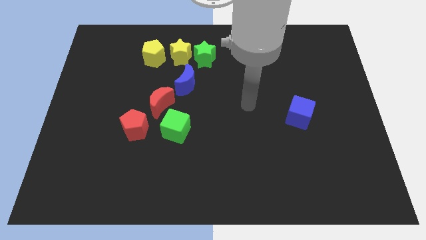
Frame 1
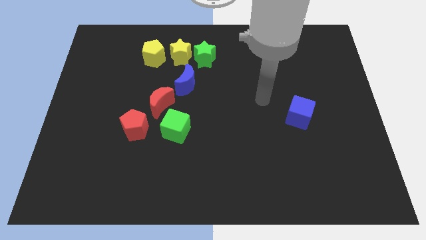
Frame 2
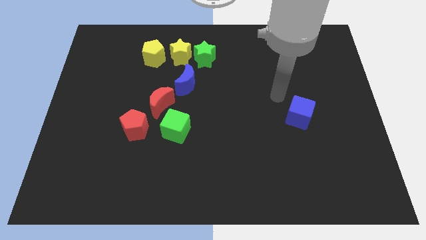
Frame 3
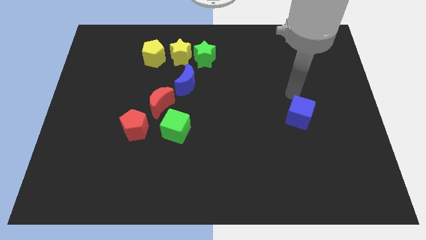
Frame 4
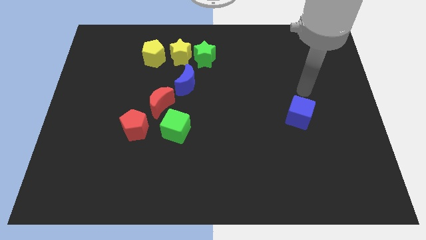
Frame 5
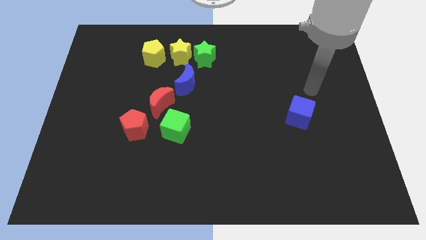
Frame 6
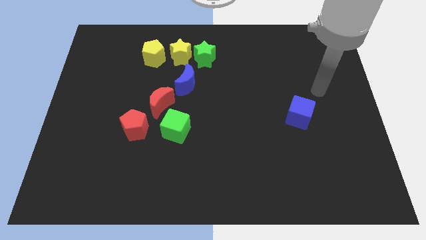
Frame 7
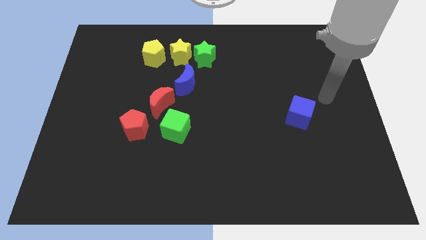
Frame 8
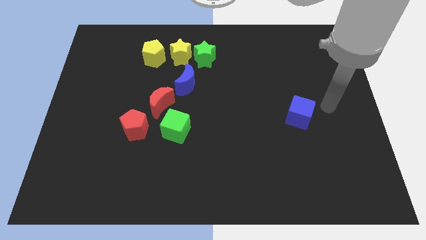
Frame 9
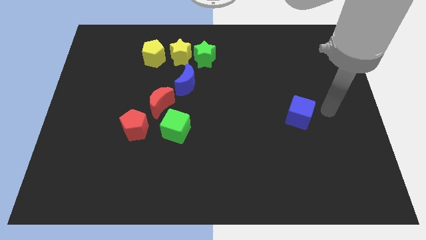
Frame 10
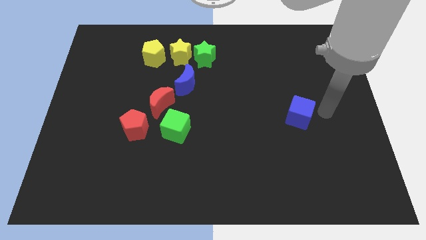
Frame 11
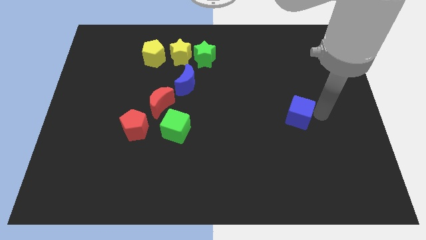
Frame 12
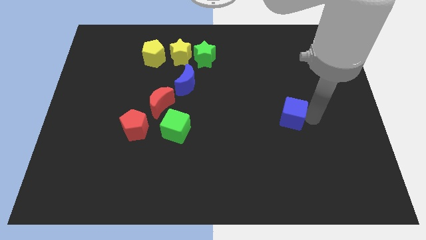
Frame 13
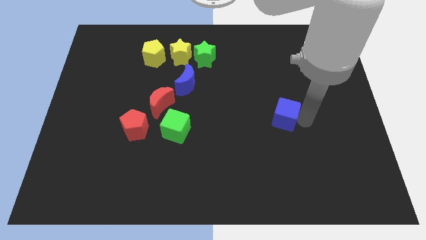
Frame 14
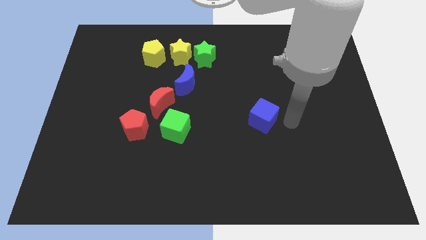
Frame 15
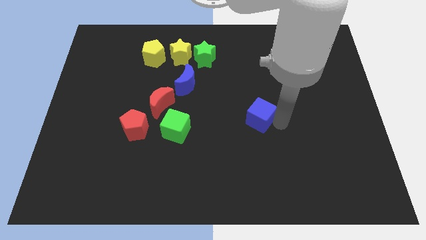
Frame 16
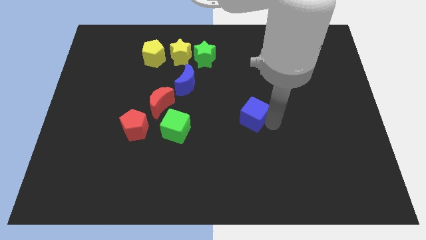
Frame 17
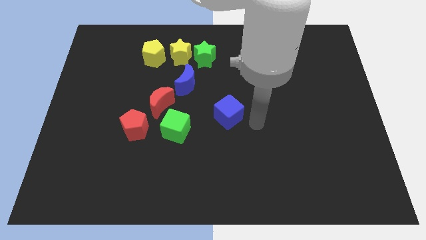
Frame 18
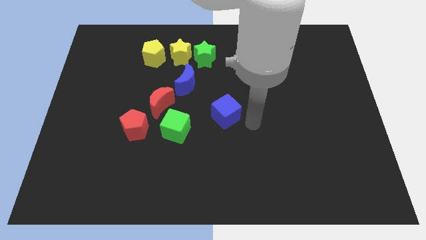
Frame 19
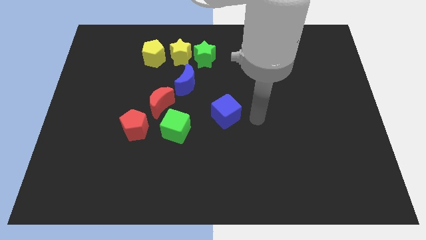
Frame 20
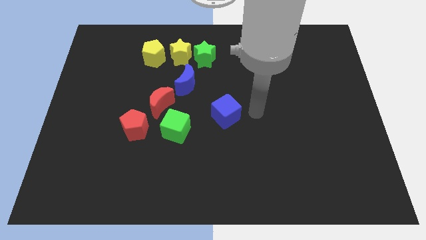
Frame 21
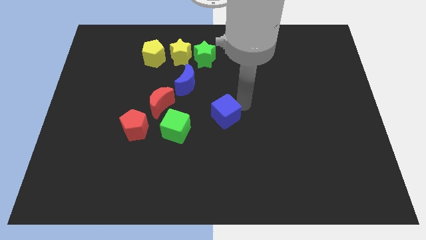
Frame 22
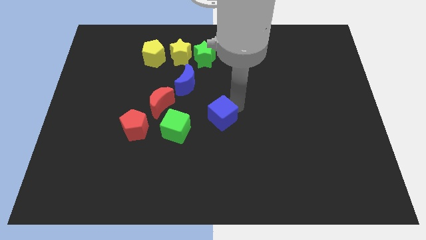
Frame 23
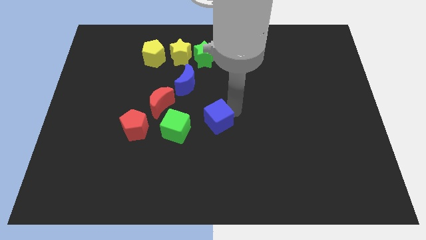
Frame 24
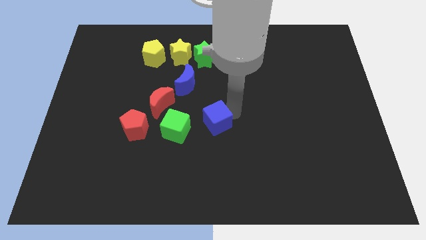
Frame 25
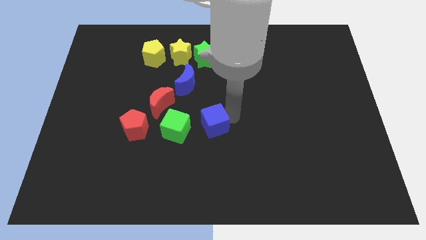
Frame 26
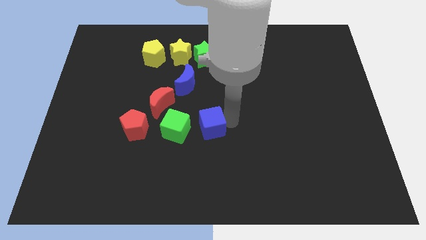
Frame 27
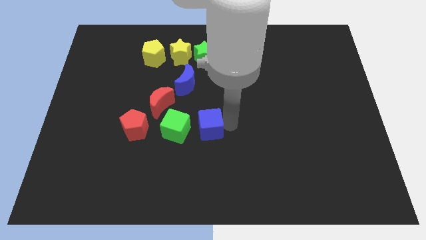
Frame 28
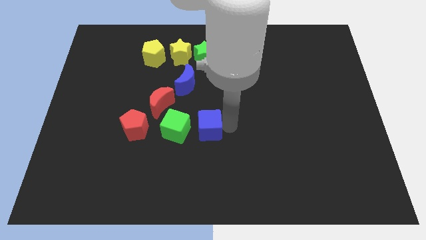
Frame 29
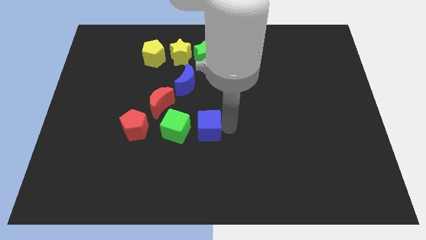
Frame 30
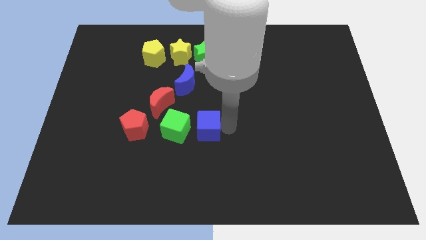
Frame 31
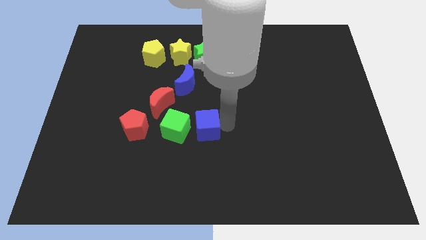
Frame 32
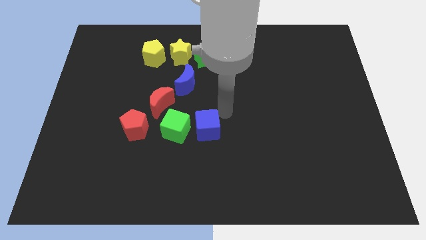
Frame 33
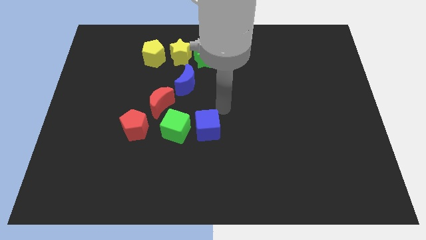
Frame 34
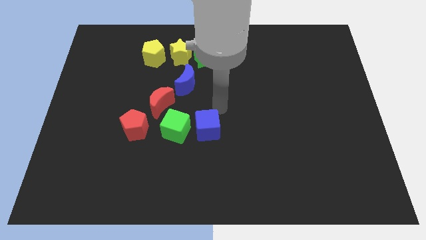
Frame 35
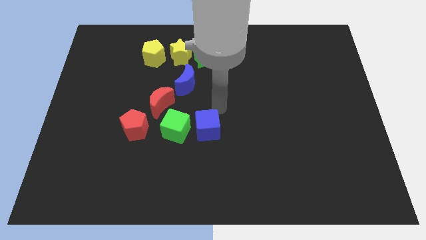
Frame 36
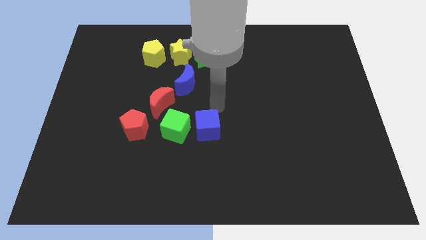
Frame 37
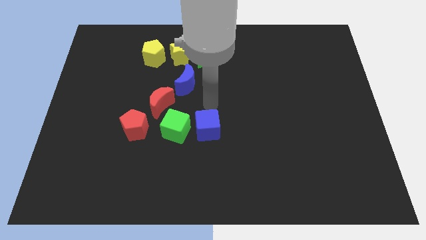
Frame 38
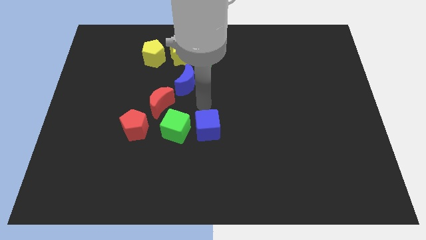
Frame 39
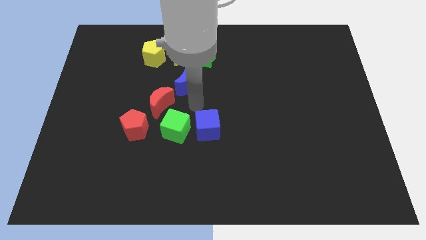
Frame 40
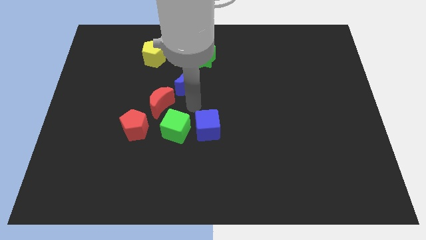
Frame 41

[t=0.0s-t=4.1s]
push the blue cube to the right side of the green cube

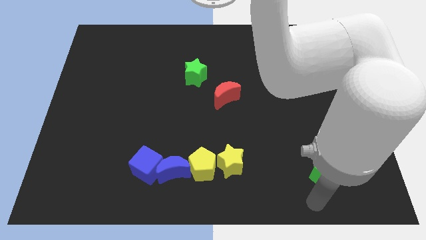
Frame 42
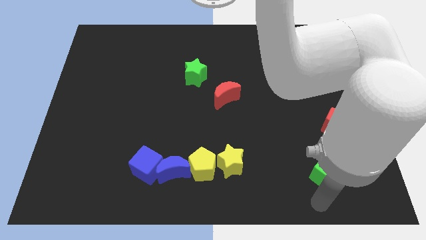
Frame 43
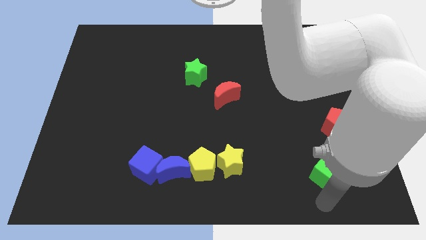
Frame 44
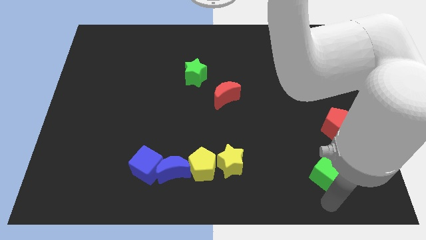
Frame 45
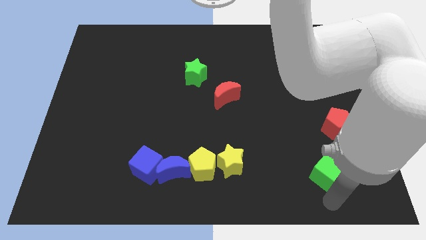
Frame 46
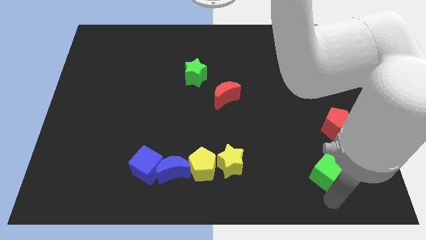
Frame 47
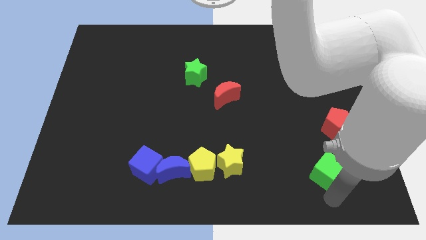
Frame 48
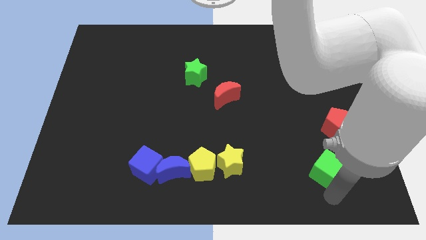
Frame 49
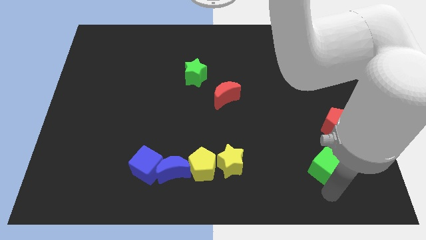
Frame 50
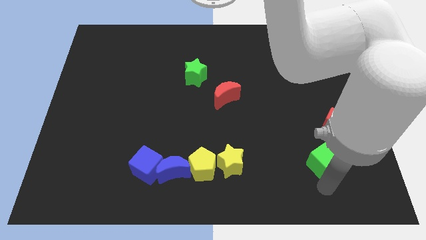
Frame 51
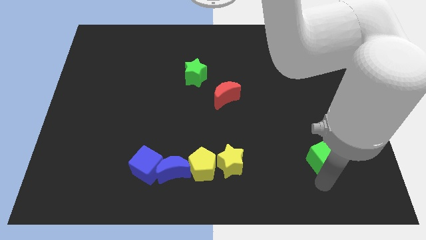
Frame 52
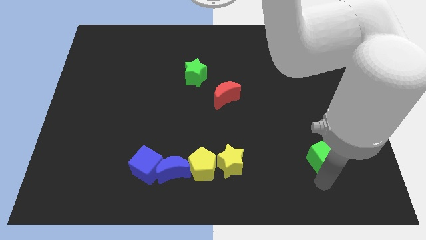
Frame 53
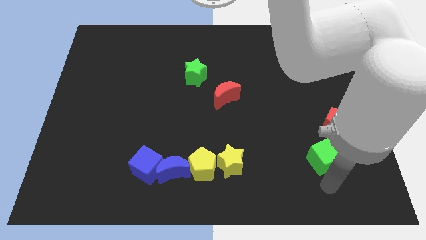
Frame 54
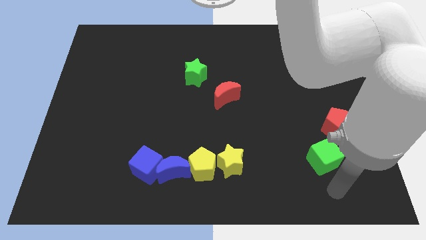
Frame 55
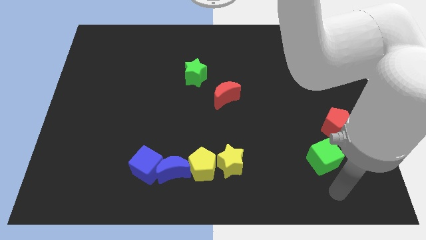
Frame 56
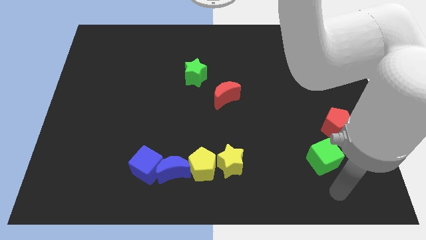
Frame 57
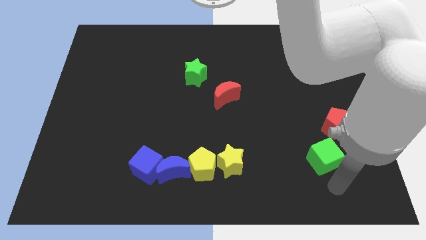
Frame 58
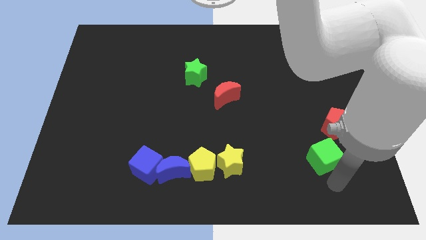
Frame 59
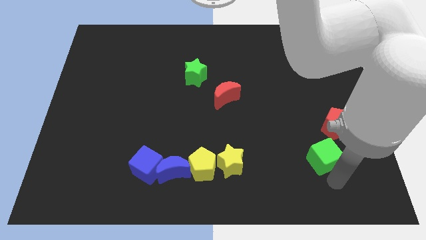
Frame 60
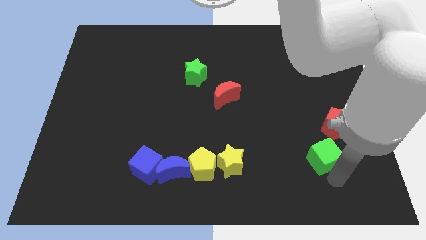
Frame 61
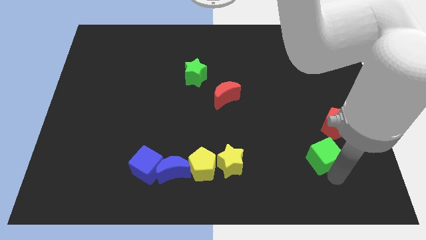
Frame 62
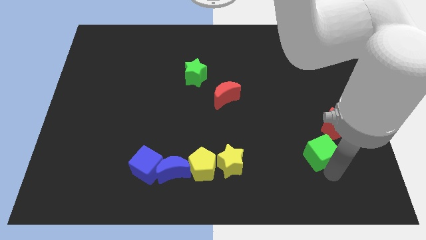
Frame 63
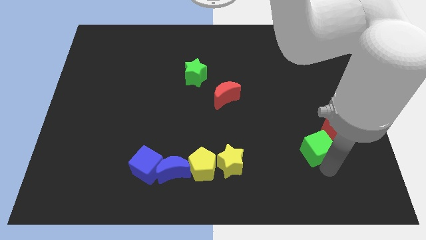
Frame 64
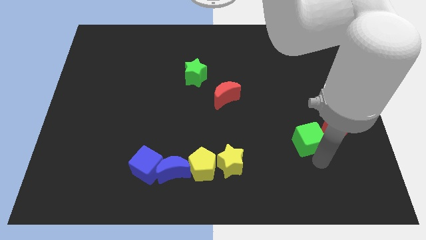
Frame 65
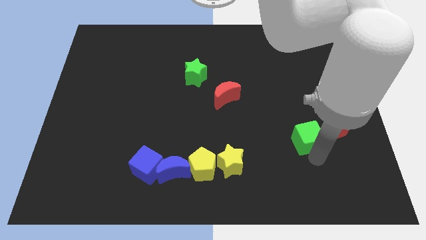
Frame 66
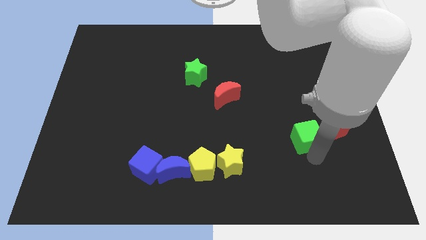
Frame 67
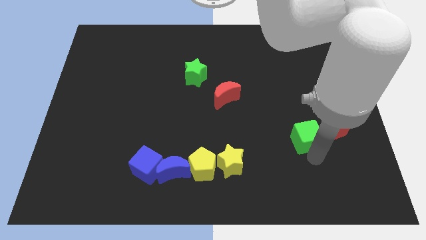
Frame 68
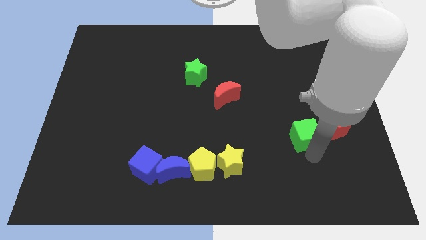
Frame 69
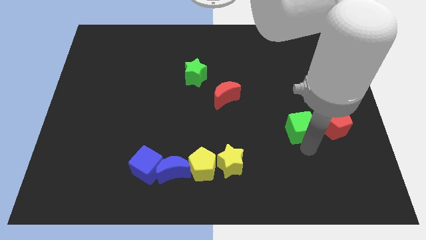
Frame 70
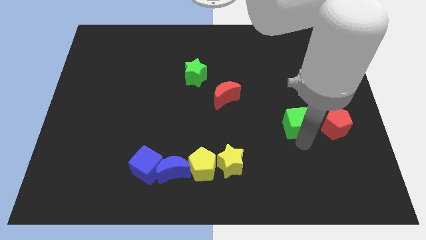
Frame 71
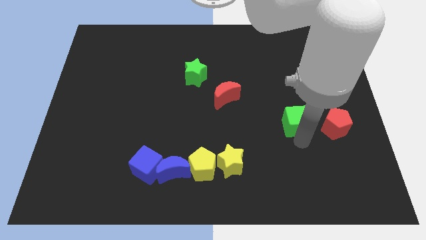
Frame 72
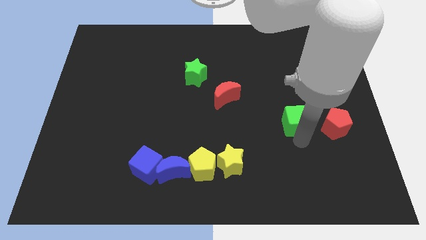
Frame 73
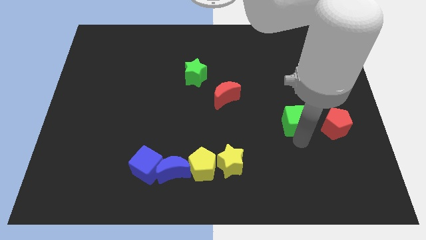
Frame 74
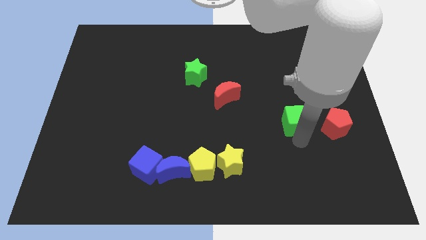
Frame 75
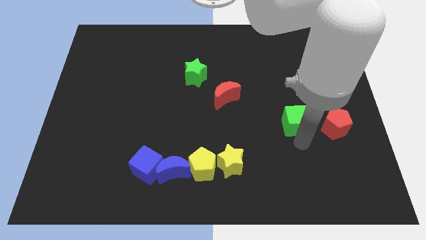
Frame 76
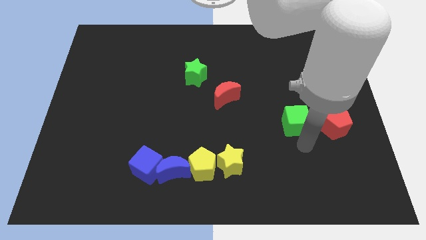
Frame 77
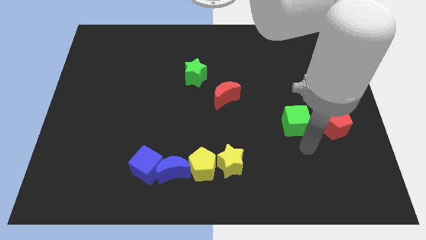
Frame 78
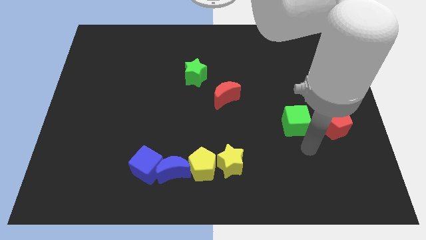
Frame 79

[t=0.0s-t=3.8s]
move the green cube to the left side of red pentagon

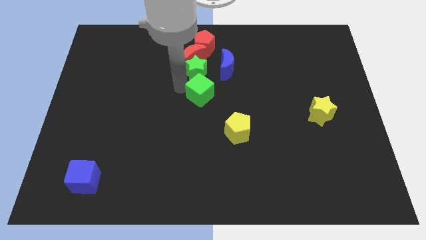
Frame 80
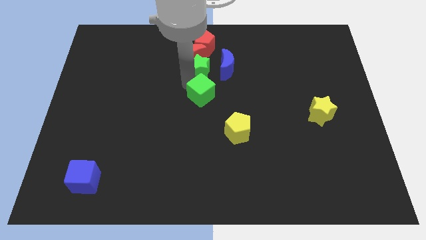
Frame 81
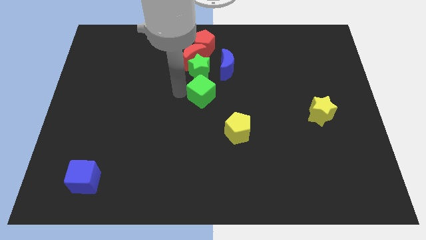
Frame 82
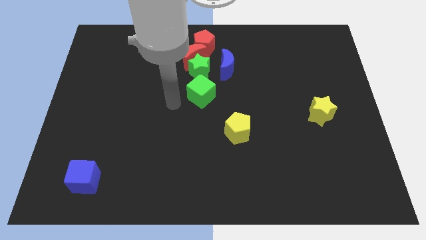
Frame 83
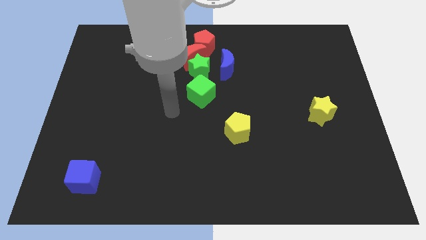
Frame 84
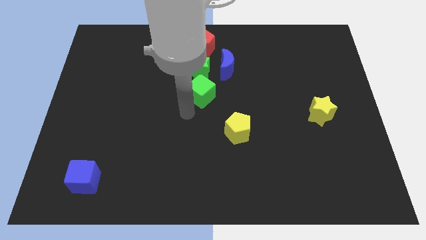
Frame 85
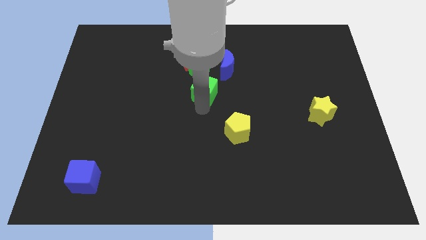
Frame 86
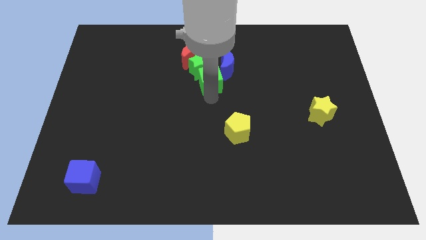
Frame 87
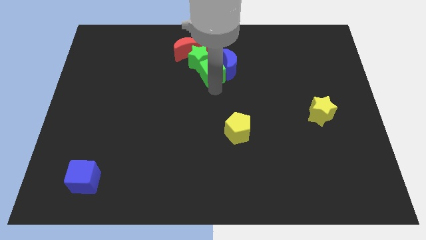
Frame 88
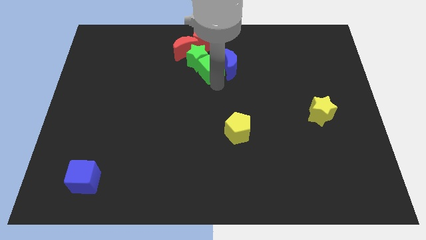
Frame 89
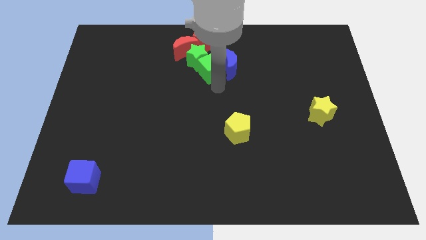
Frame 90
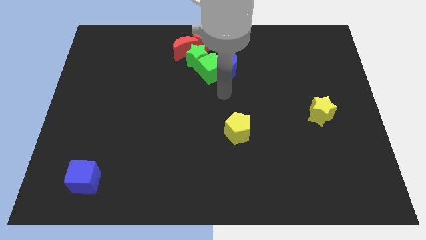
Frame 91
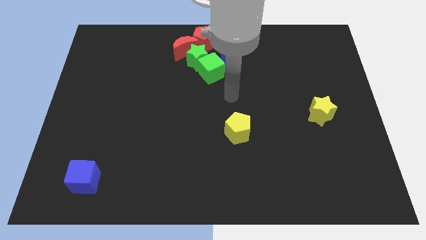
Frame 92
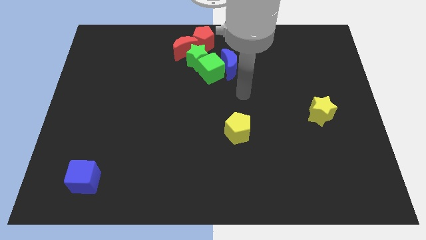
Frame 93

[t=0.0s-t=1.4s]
push the green star into the red moon with the green cube
